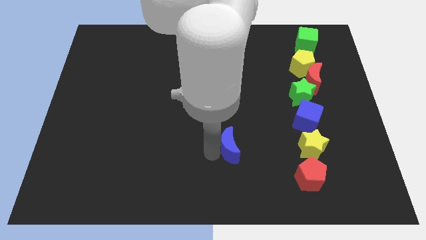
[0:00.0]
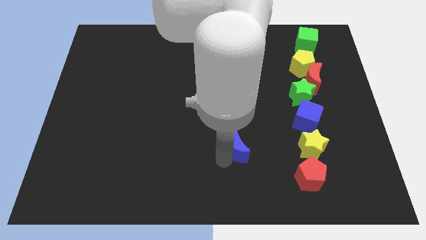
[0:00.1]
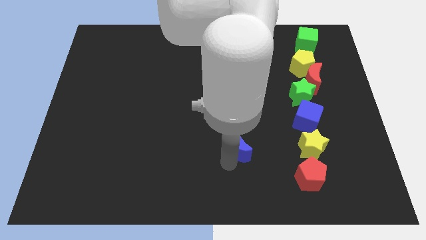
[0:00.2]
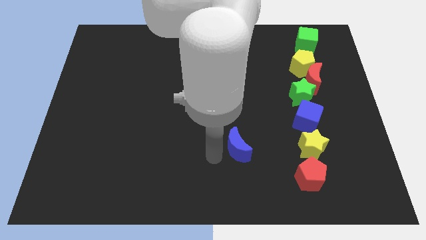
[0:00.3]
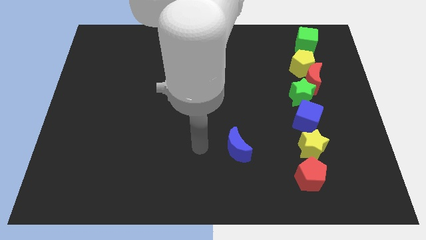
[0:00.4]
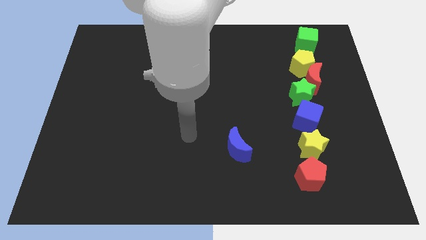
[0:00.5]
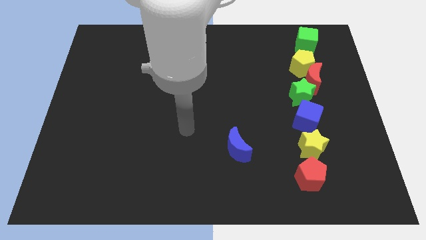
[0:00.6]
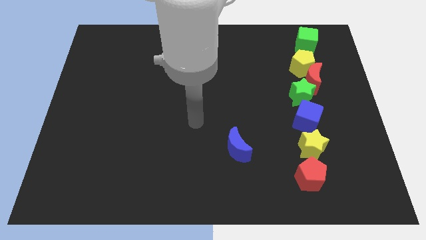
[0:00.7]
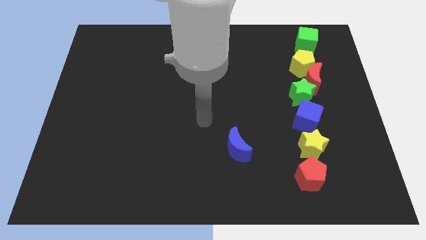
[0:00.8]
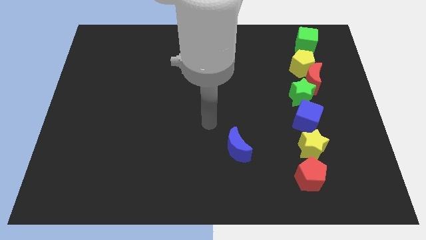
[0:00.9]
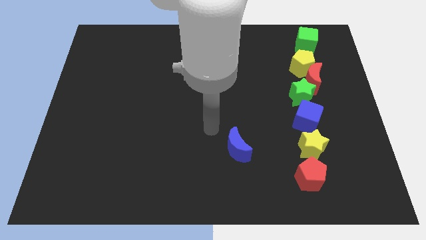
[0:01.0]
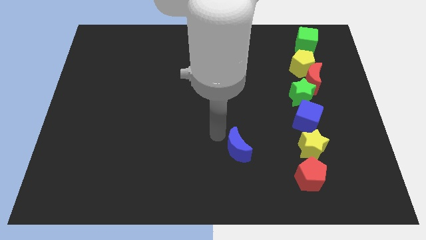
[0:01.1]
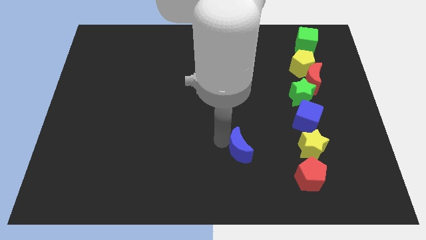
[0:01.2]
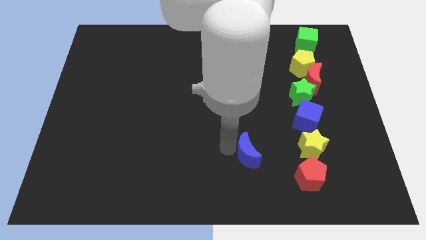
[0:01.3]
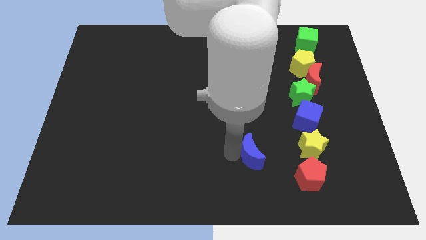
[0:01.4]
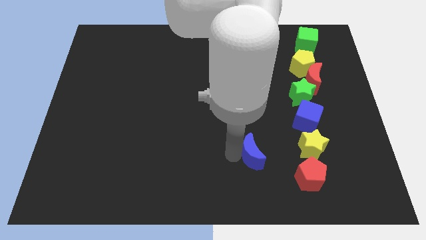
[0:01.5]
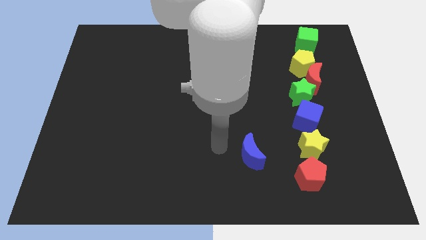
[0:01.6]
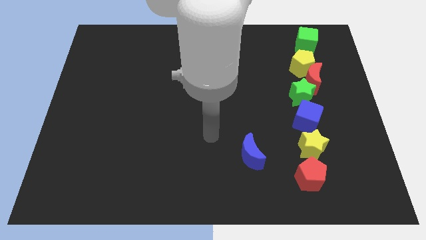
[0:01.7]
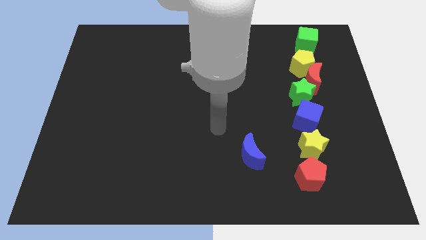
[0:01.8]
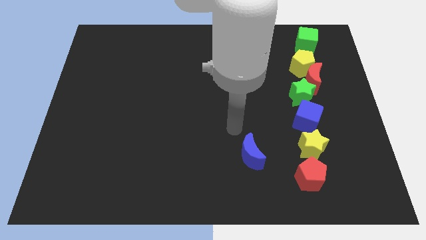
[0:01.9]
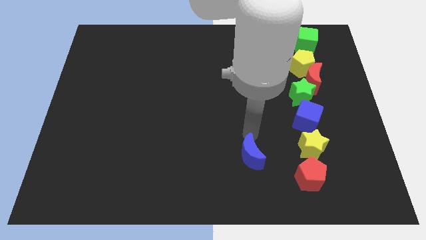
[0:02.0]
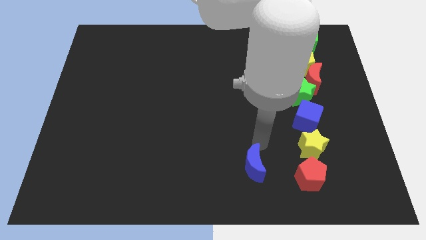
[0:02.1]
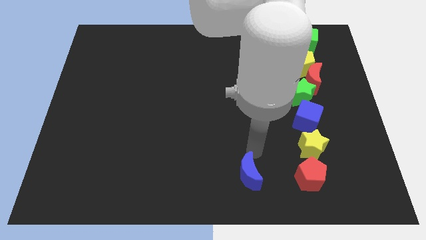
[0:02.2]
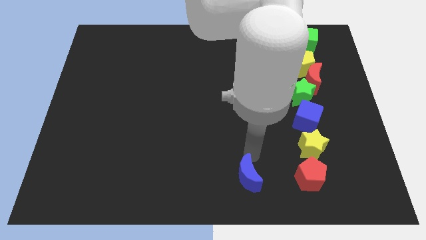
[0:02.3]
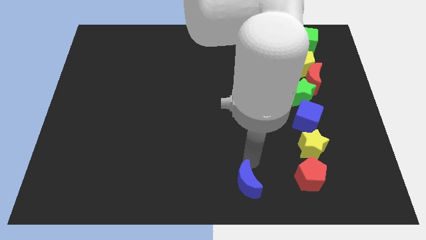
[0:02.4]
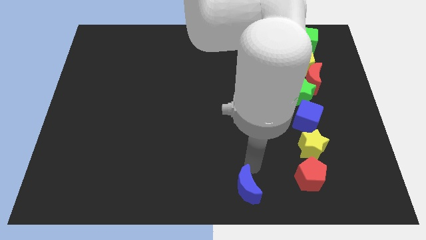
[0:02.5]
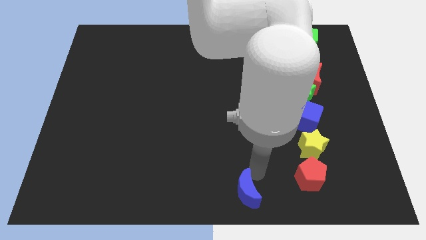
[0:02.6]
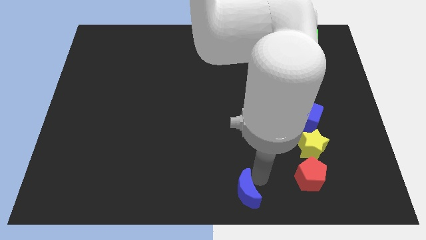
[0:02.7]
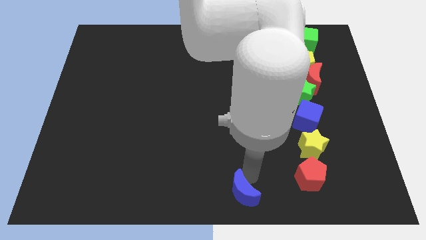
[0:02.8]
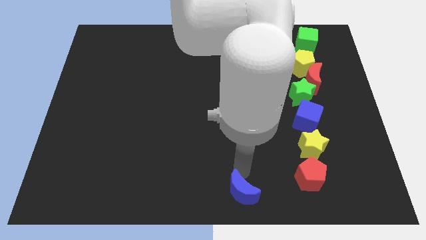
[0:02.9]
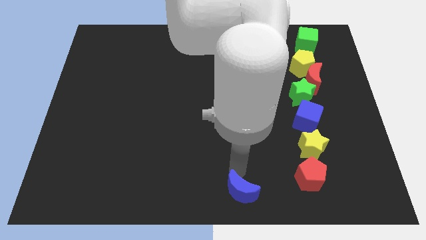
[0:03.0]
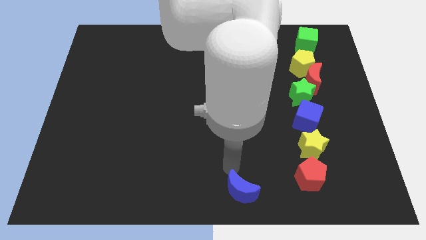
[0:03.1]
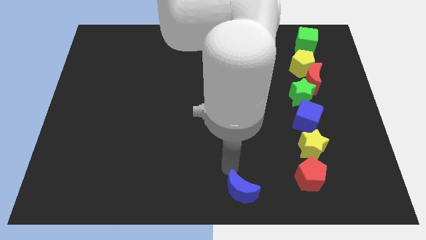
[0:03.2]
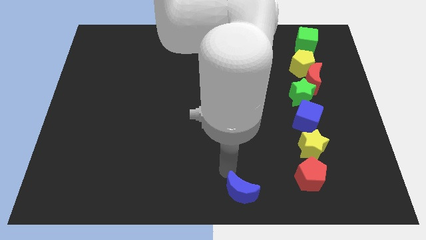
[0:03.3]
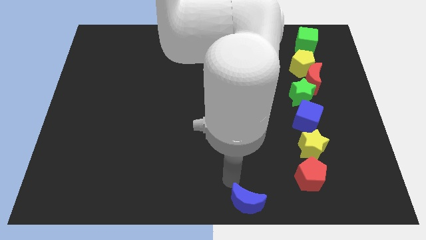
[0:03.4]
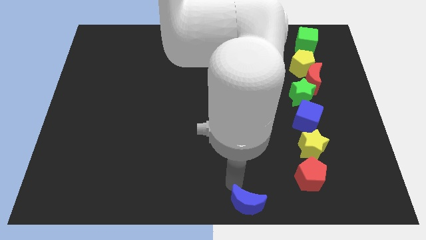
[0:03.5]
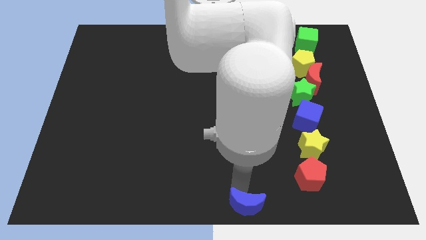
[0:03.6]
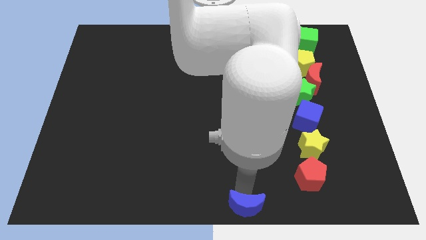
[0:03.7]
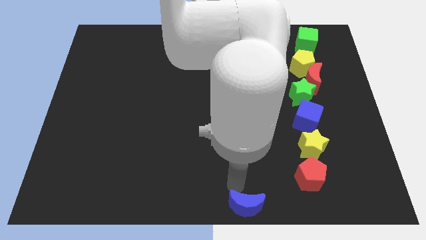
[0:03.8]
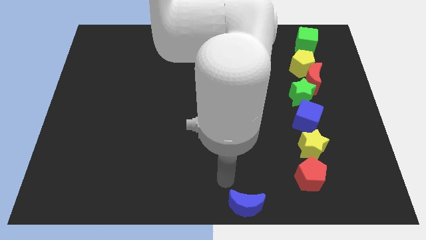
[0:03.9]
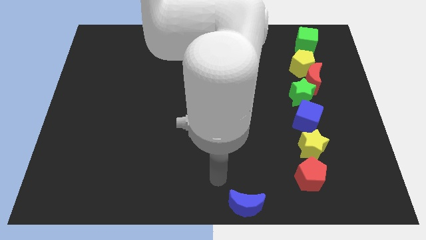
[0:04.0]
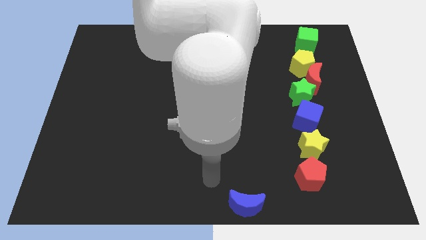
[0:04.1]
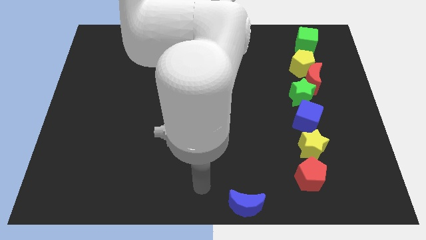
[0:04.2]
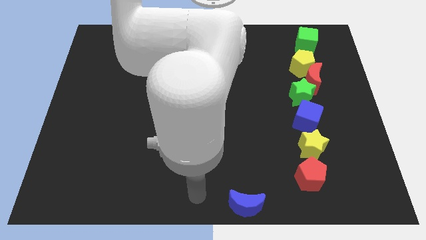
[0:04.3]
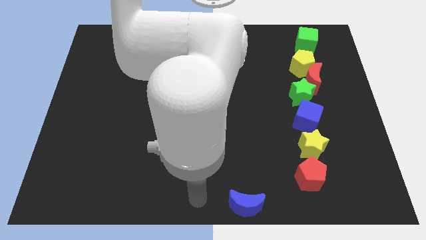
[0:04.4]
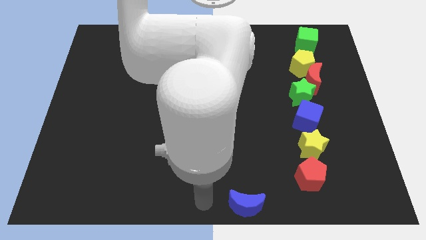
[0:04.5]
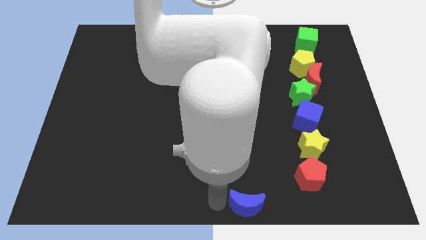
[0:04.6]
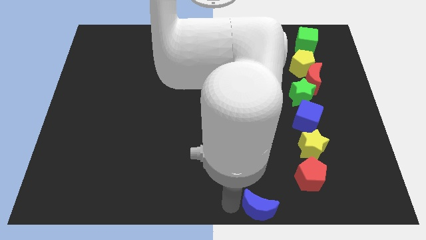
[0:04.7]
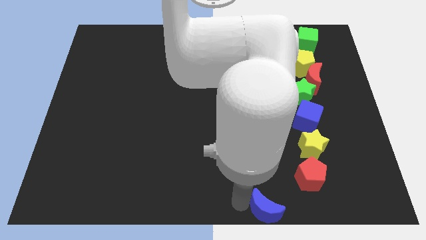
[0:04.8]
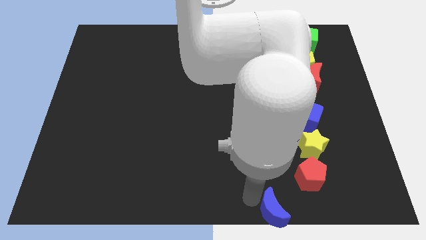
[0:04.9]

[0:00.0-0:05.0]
place the blue cube to left bottom side of the red pentagon

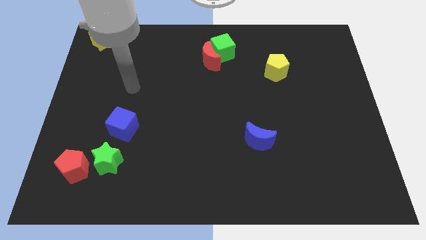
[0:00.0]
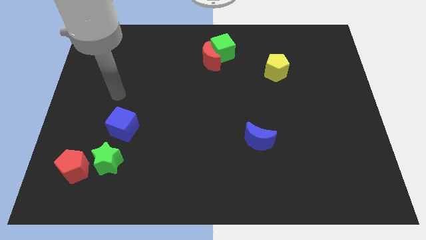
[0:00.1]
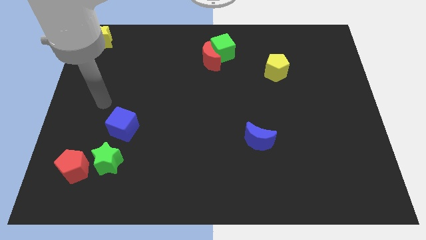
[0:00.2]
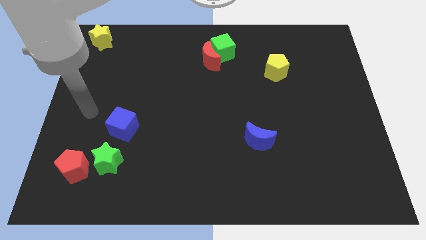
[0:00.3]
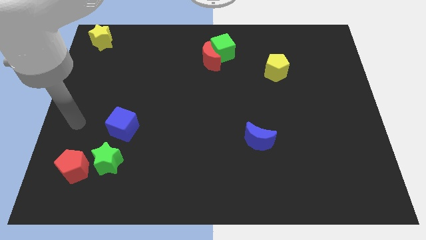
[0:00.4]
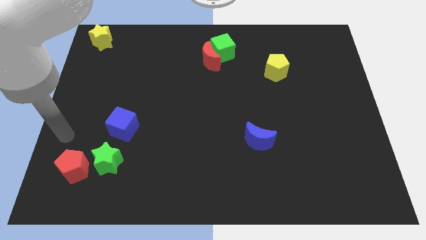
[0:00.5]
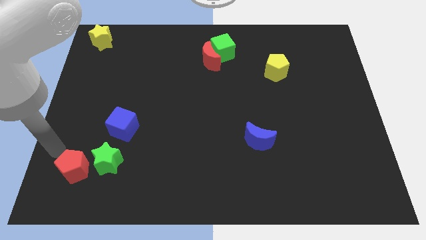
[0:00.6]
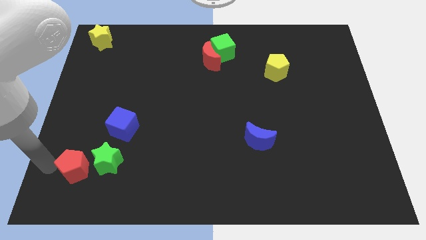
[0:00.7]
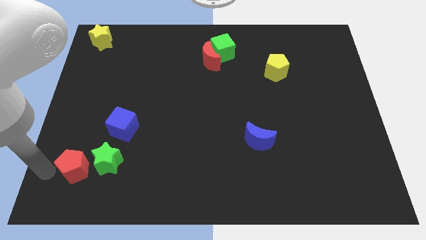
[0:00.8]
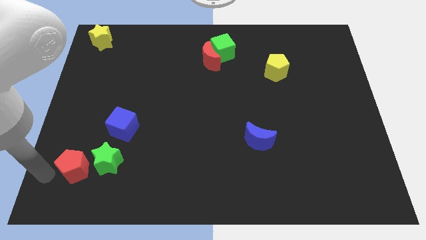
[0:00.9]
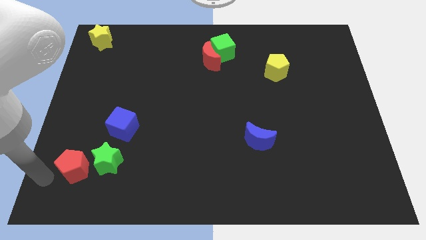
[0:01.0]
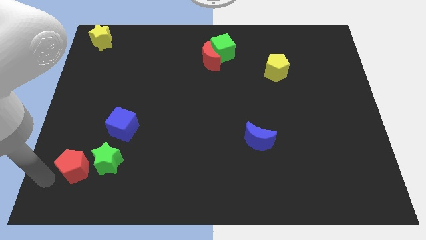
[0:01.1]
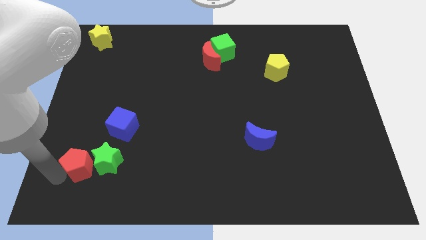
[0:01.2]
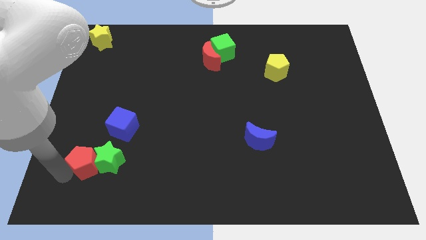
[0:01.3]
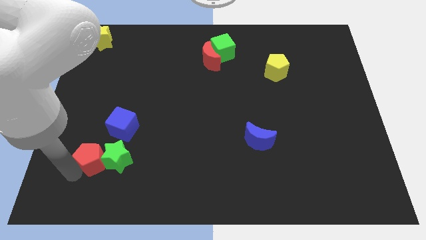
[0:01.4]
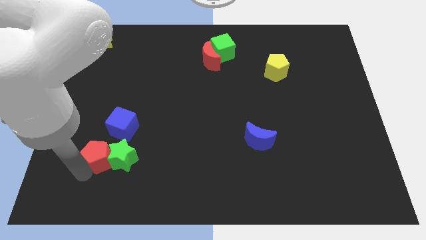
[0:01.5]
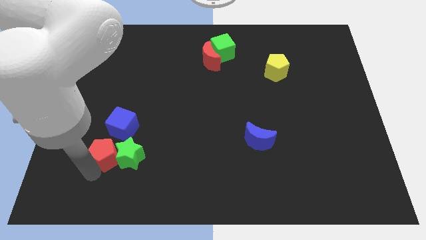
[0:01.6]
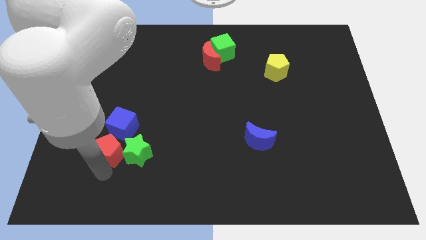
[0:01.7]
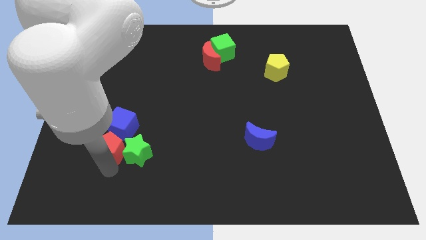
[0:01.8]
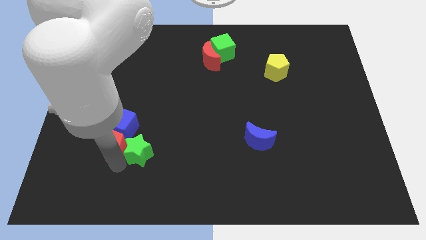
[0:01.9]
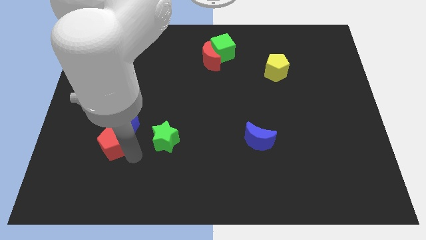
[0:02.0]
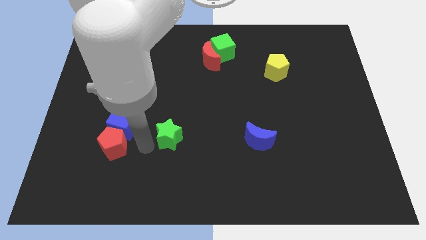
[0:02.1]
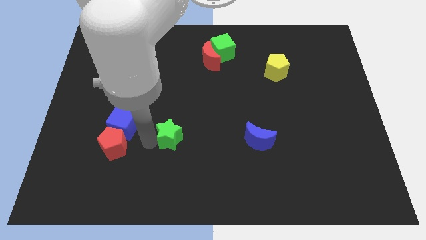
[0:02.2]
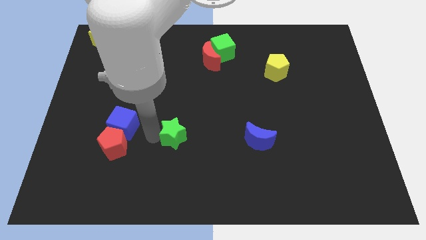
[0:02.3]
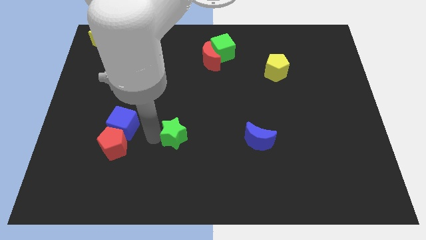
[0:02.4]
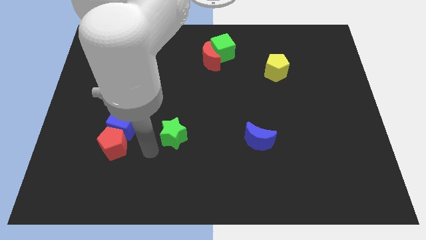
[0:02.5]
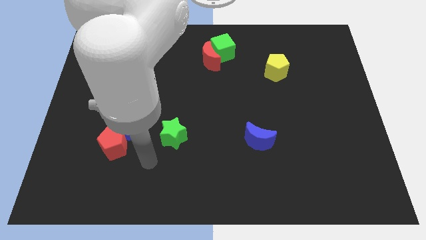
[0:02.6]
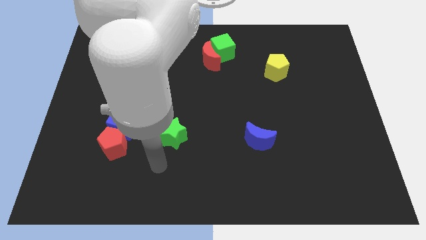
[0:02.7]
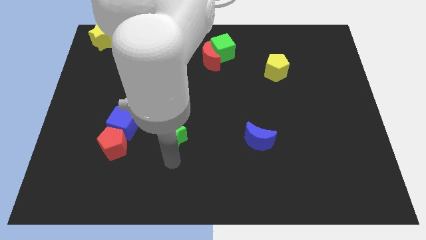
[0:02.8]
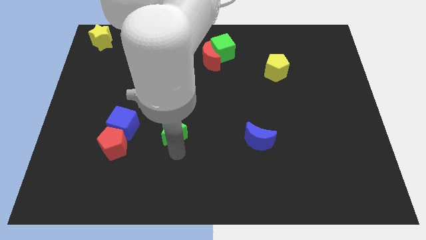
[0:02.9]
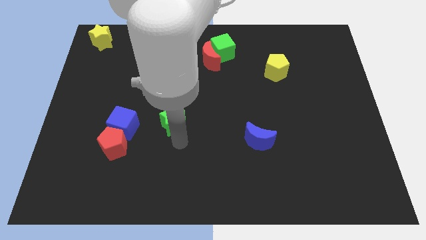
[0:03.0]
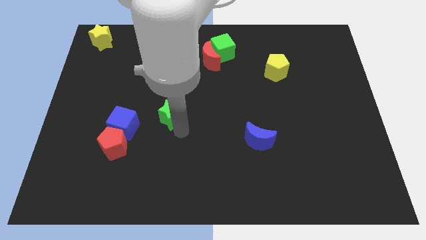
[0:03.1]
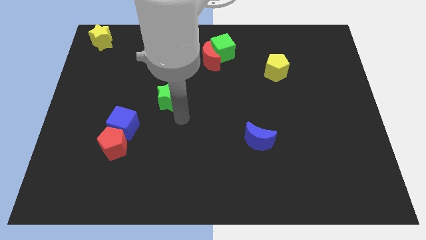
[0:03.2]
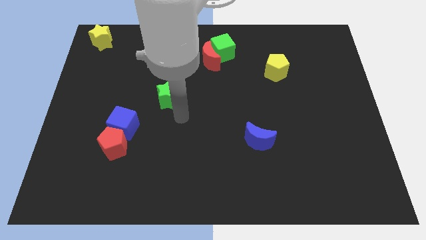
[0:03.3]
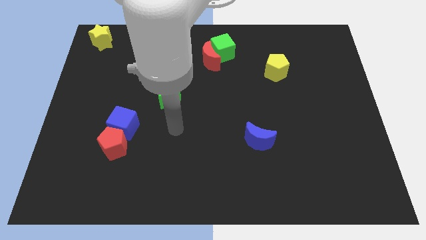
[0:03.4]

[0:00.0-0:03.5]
separate the red pentagon and green sta

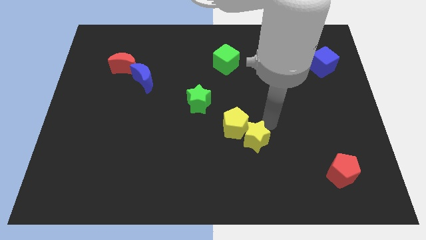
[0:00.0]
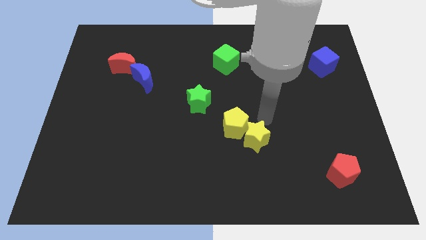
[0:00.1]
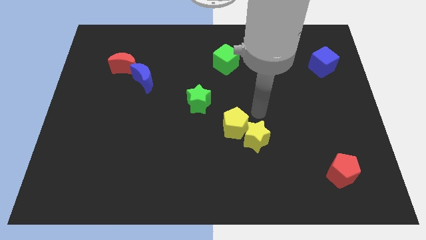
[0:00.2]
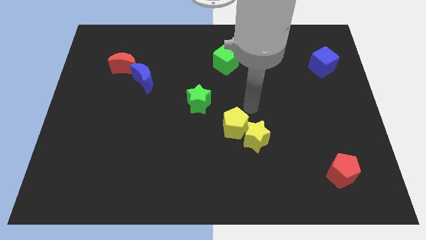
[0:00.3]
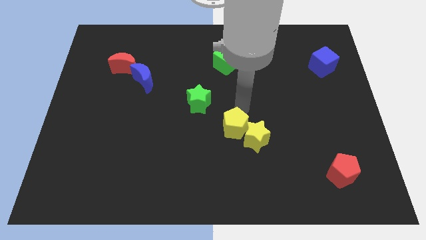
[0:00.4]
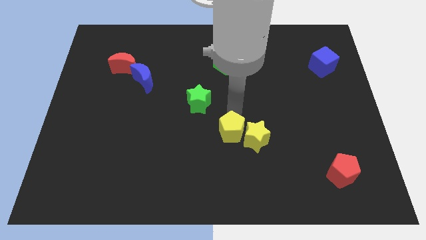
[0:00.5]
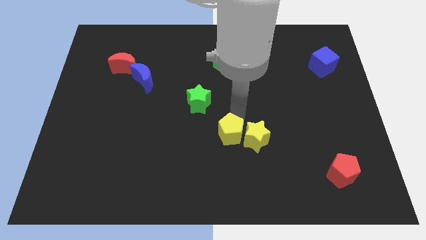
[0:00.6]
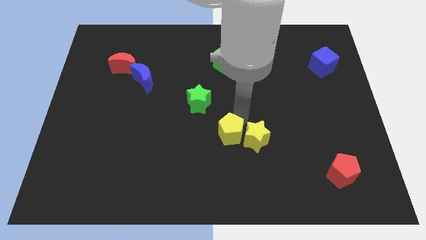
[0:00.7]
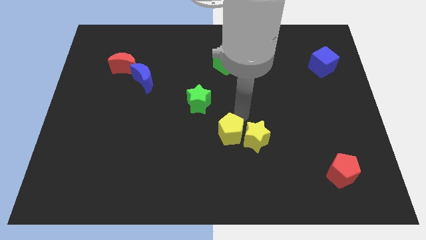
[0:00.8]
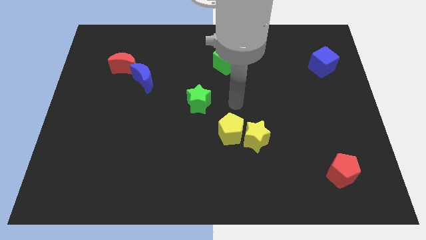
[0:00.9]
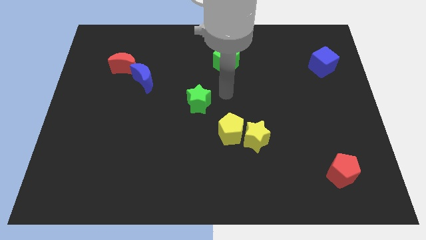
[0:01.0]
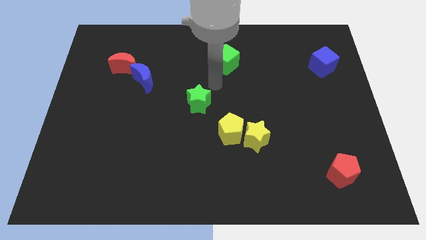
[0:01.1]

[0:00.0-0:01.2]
slightly push the yellow pentagon slightly towards the bottom center of the board
